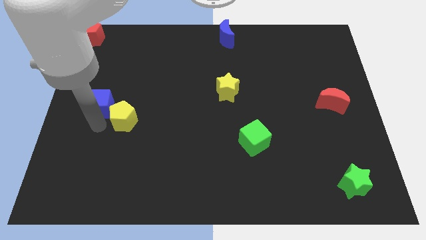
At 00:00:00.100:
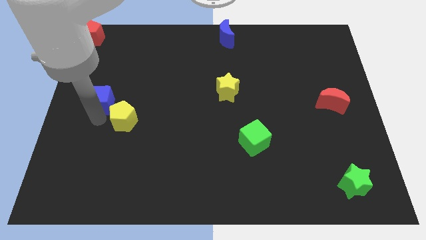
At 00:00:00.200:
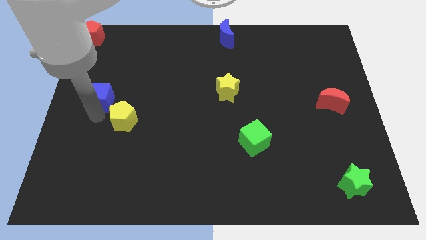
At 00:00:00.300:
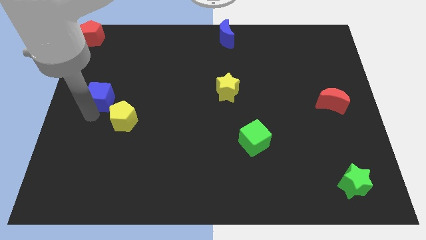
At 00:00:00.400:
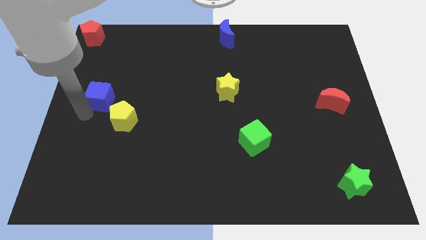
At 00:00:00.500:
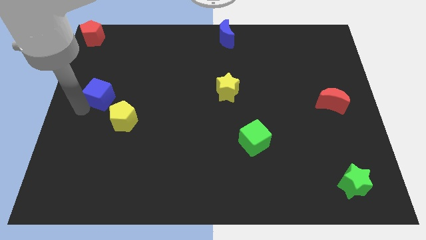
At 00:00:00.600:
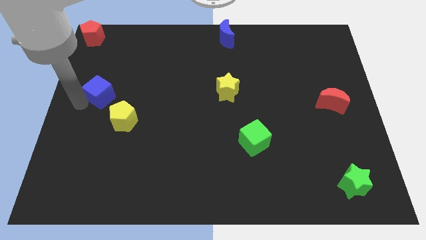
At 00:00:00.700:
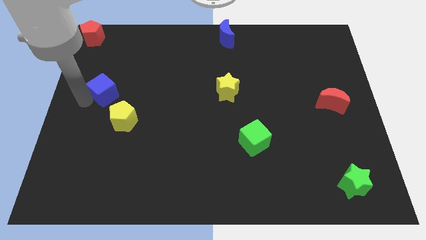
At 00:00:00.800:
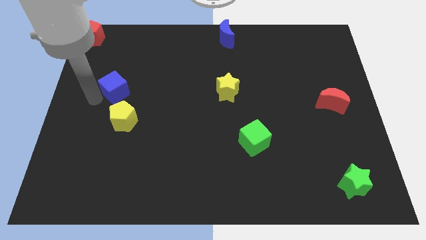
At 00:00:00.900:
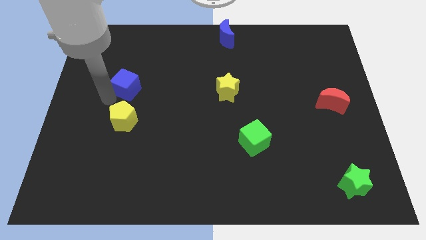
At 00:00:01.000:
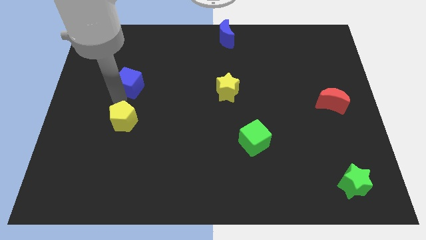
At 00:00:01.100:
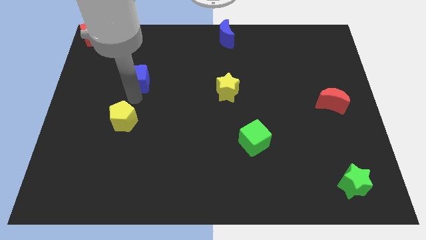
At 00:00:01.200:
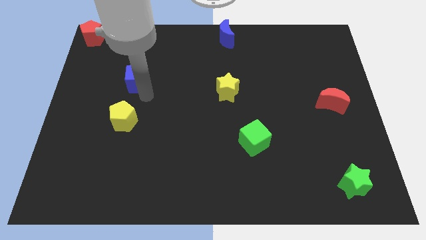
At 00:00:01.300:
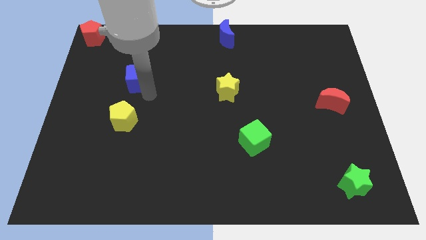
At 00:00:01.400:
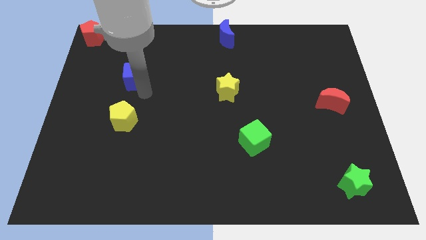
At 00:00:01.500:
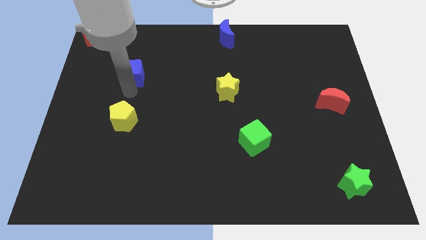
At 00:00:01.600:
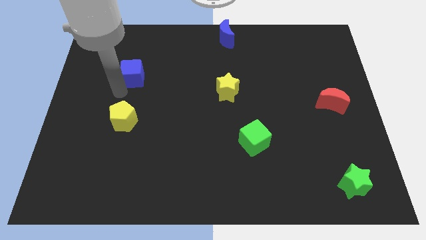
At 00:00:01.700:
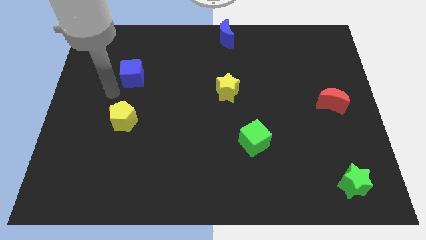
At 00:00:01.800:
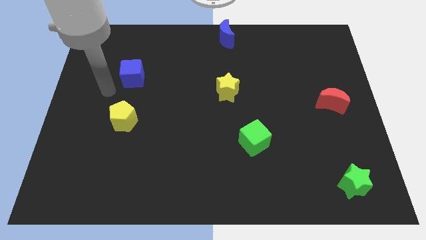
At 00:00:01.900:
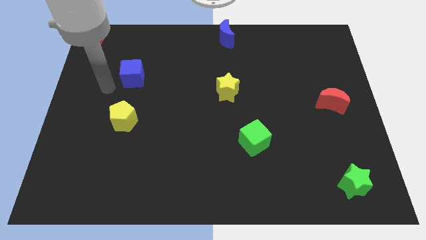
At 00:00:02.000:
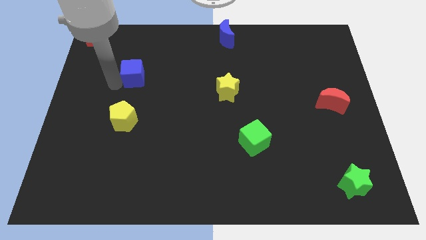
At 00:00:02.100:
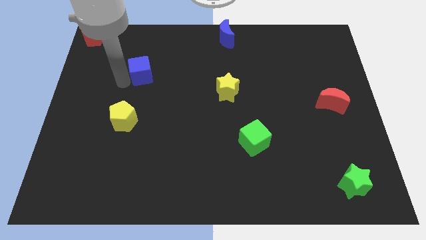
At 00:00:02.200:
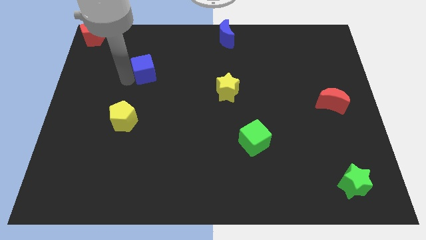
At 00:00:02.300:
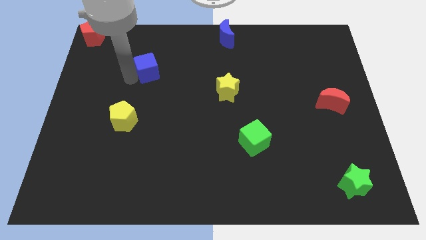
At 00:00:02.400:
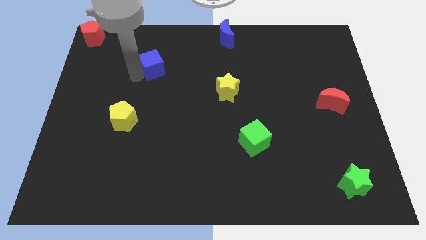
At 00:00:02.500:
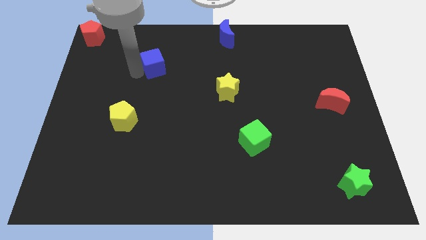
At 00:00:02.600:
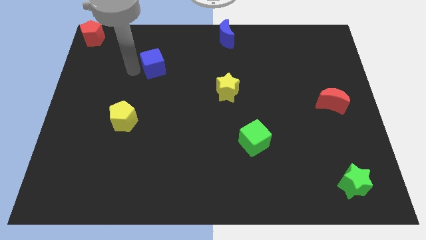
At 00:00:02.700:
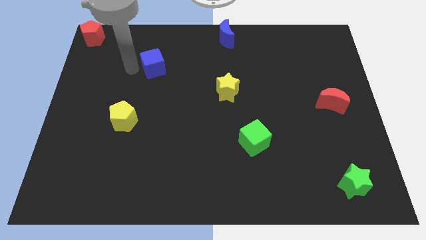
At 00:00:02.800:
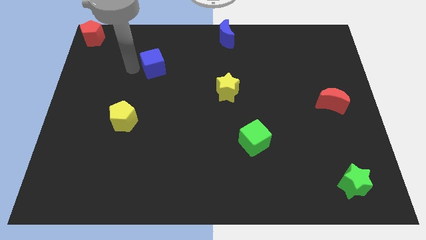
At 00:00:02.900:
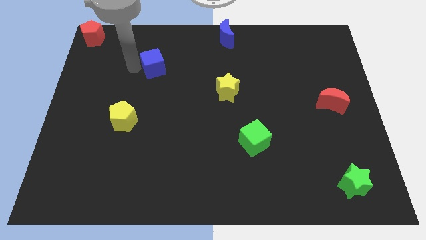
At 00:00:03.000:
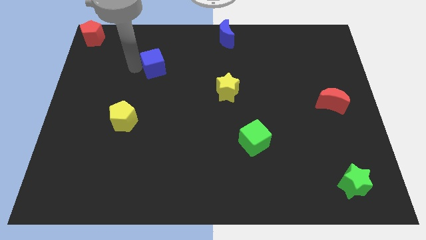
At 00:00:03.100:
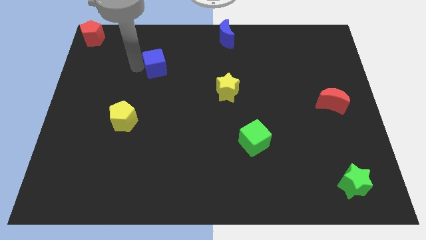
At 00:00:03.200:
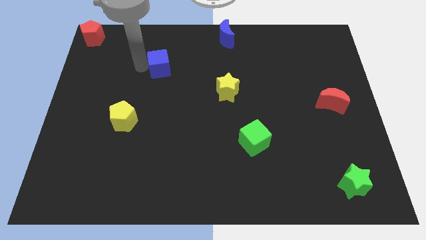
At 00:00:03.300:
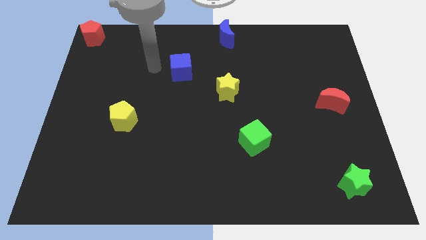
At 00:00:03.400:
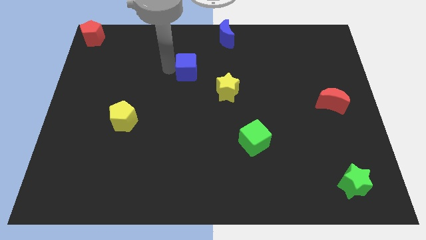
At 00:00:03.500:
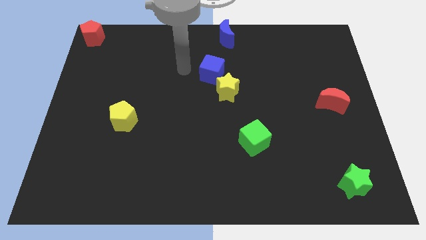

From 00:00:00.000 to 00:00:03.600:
move the blue cube to the top of the yellow star

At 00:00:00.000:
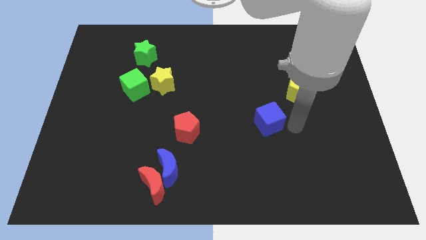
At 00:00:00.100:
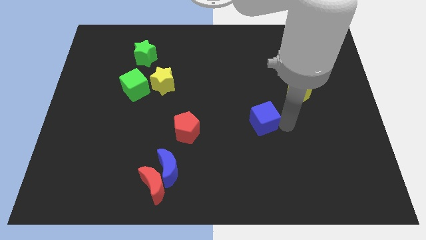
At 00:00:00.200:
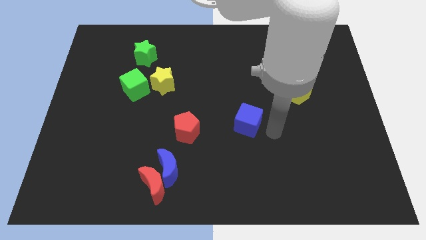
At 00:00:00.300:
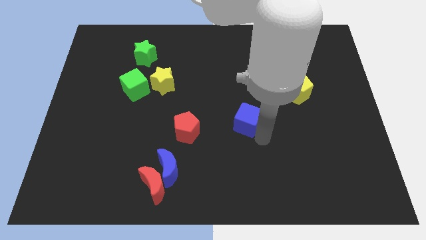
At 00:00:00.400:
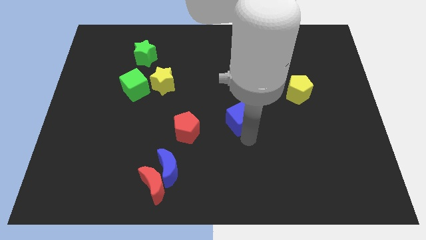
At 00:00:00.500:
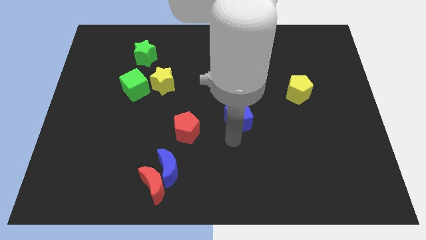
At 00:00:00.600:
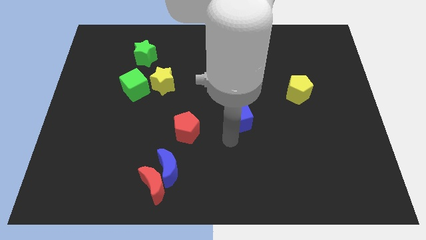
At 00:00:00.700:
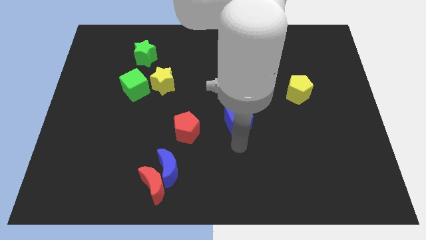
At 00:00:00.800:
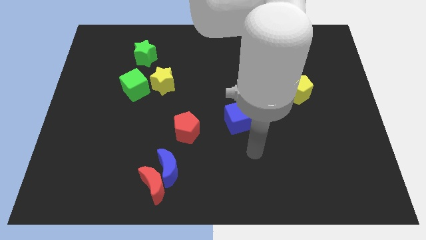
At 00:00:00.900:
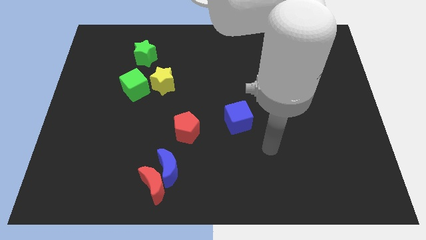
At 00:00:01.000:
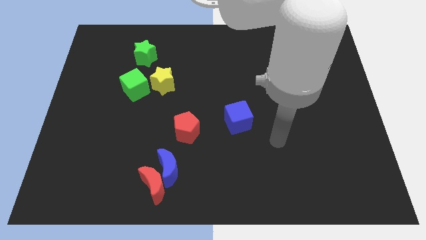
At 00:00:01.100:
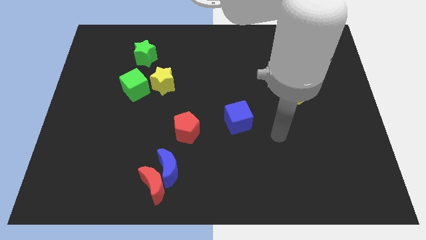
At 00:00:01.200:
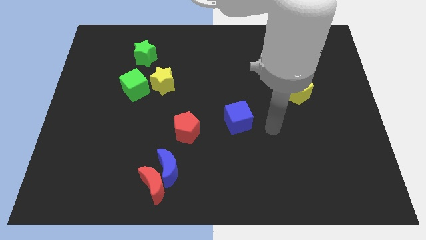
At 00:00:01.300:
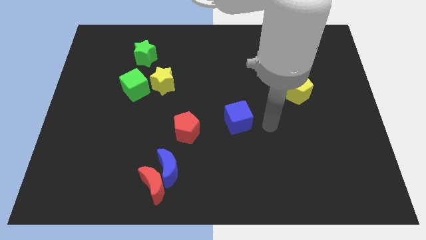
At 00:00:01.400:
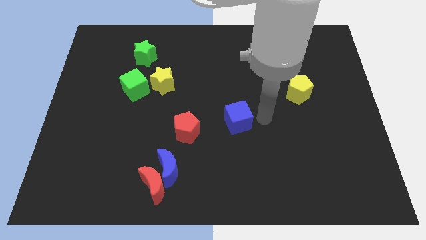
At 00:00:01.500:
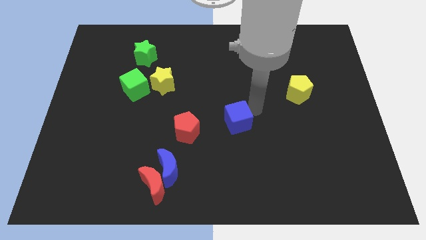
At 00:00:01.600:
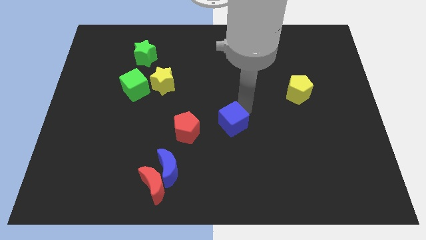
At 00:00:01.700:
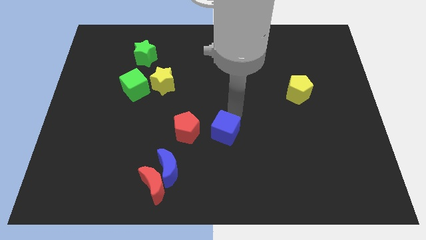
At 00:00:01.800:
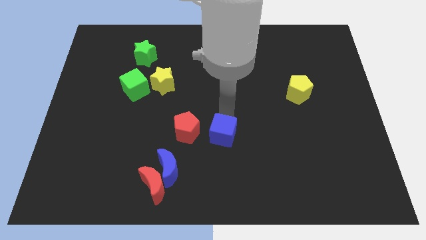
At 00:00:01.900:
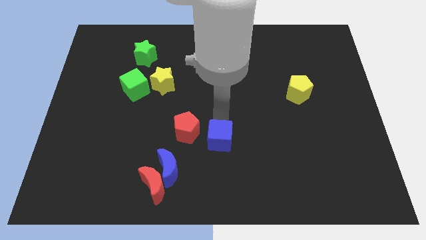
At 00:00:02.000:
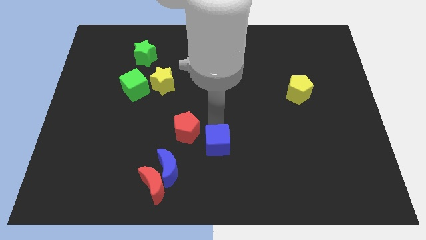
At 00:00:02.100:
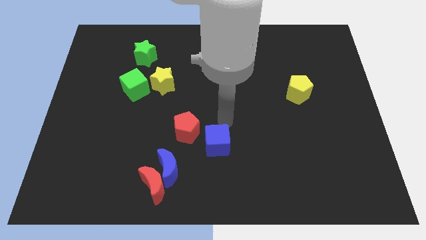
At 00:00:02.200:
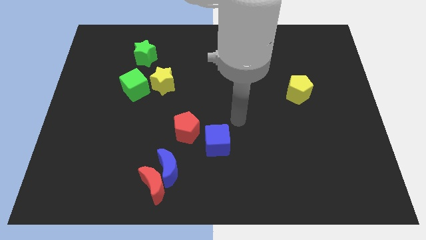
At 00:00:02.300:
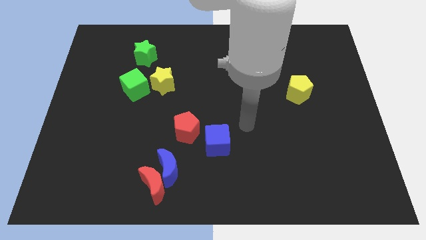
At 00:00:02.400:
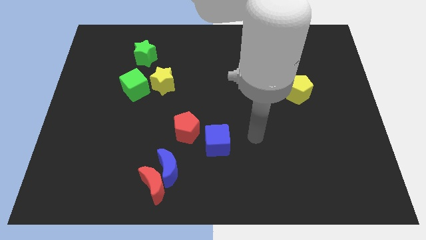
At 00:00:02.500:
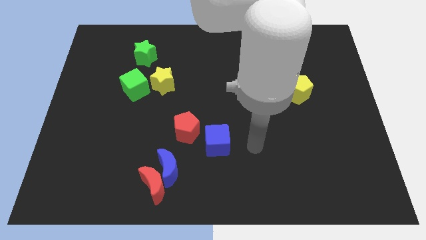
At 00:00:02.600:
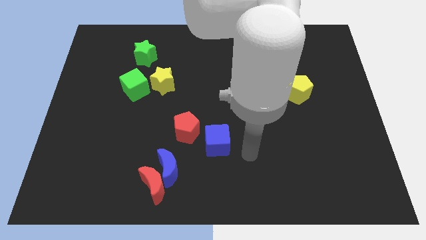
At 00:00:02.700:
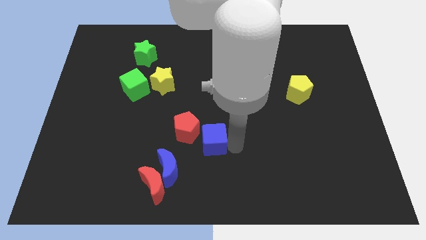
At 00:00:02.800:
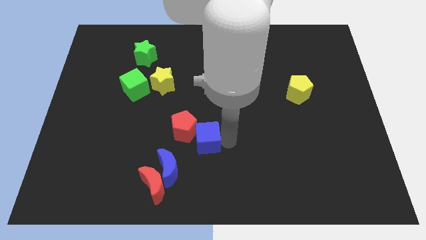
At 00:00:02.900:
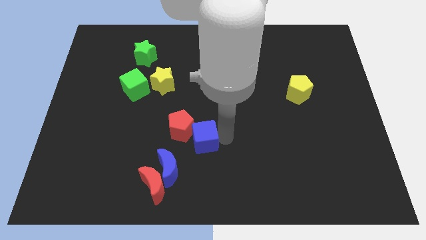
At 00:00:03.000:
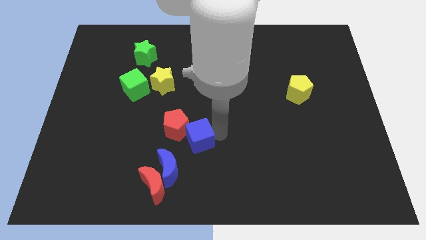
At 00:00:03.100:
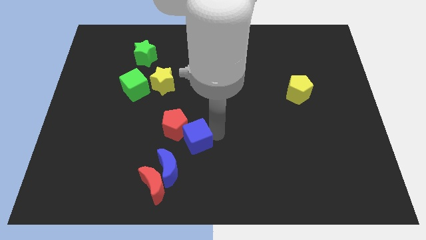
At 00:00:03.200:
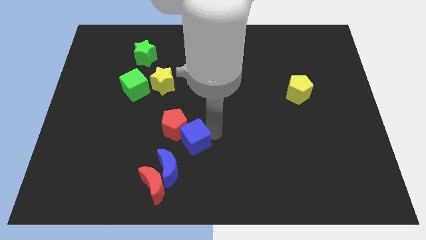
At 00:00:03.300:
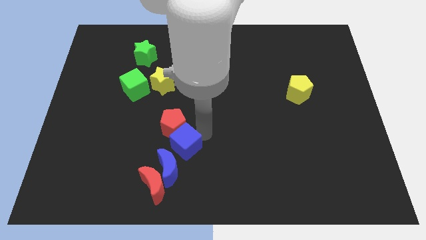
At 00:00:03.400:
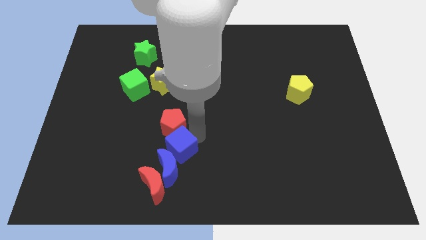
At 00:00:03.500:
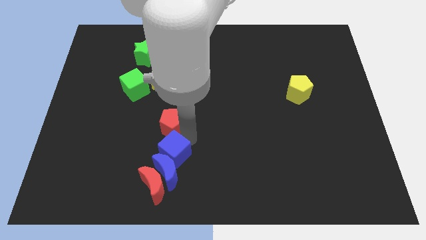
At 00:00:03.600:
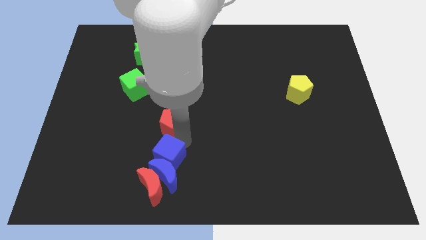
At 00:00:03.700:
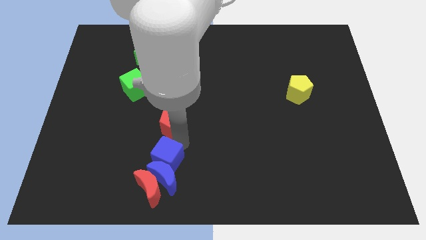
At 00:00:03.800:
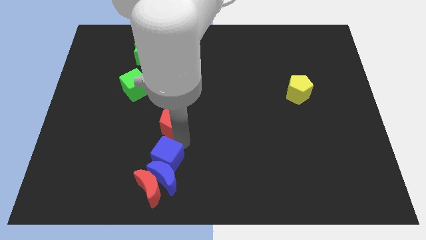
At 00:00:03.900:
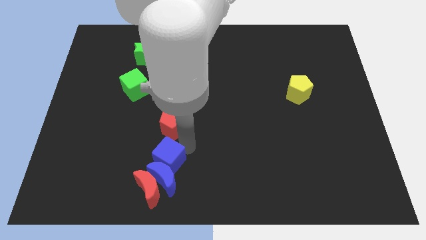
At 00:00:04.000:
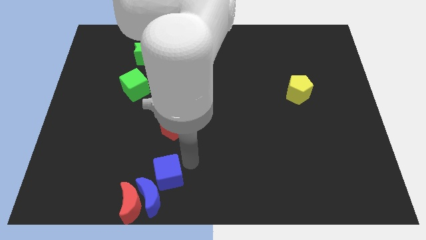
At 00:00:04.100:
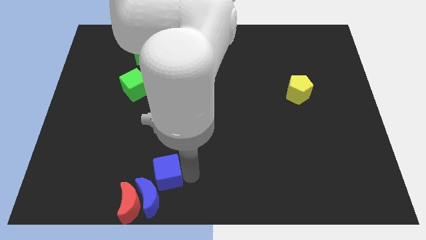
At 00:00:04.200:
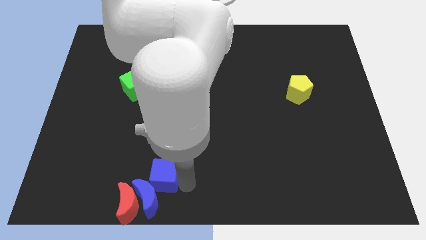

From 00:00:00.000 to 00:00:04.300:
push the blue cube between red pentagon and blue moon

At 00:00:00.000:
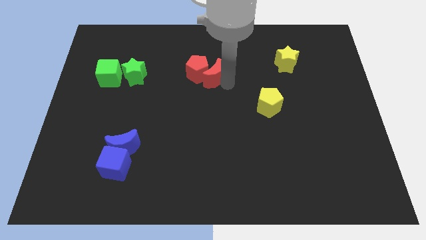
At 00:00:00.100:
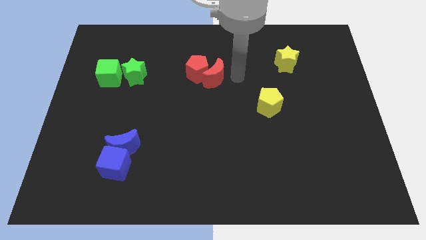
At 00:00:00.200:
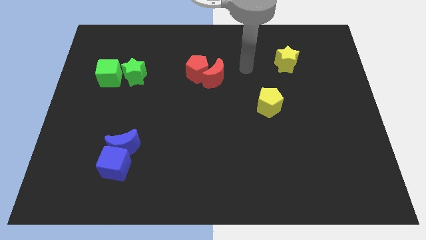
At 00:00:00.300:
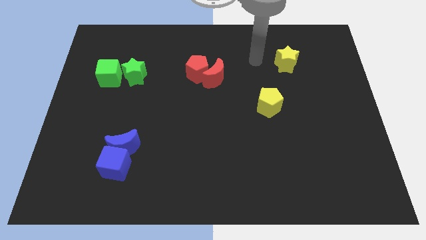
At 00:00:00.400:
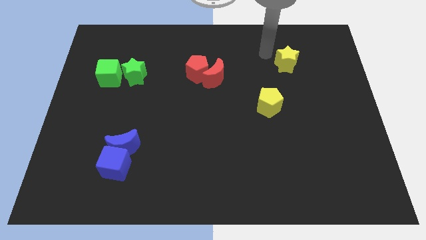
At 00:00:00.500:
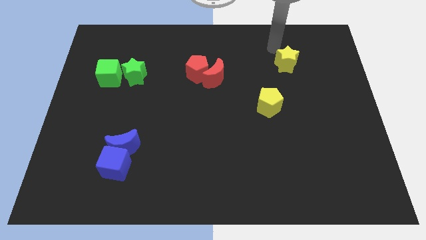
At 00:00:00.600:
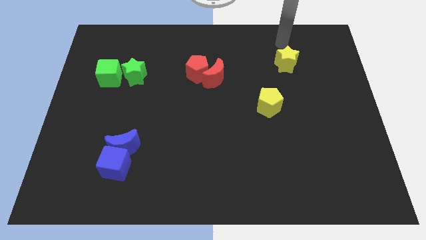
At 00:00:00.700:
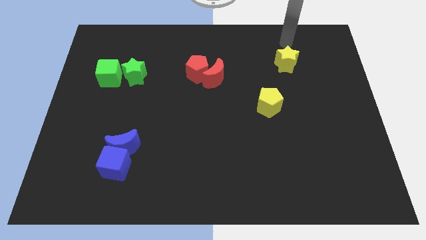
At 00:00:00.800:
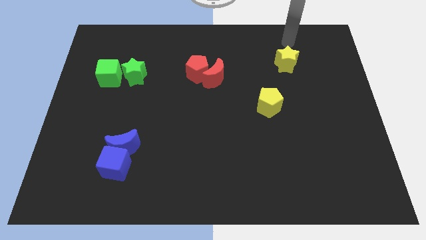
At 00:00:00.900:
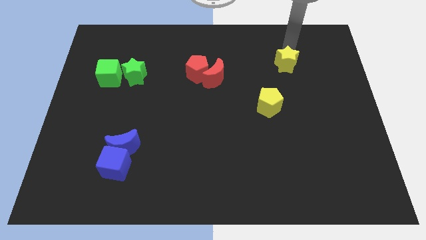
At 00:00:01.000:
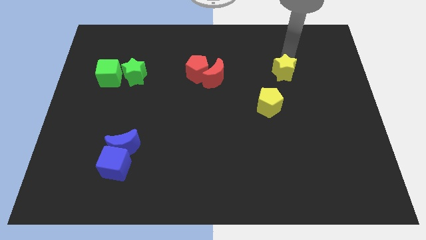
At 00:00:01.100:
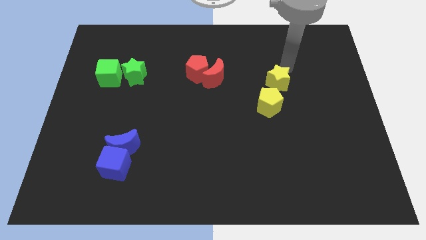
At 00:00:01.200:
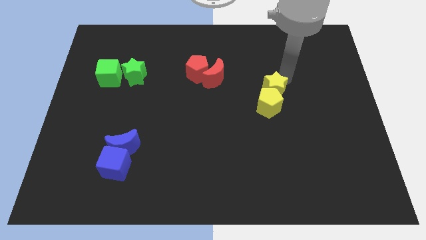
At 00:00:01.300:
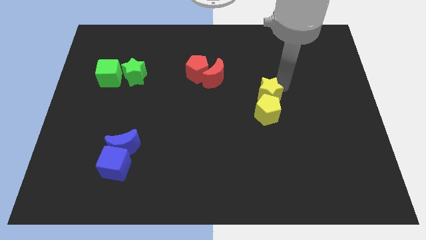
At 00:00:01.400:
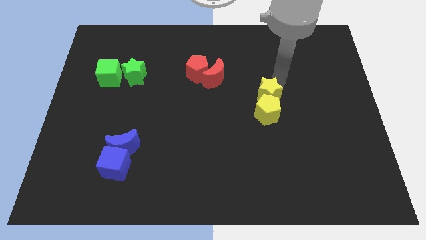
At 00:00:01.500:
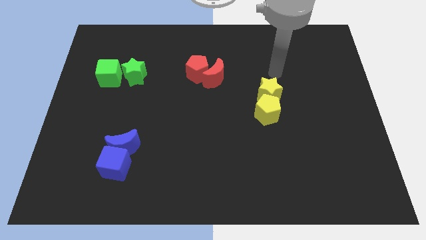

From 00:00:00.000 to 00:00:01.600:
push the yellow star towards the top of the yellow pentagon
